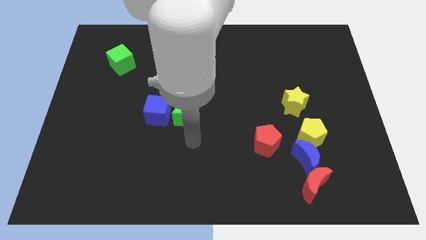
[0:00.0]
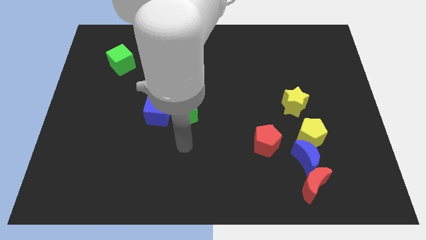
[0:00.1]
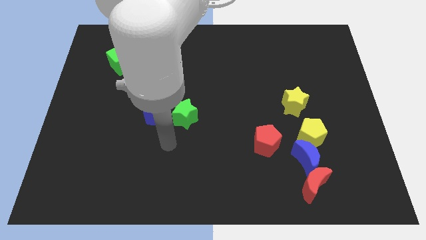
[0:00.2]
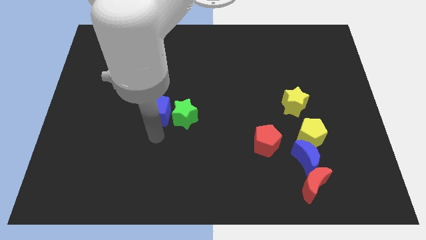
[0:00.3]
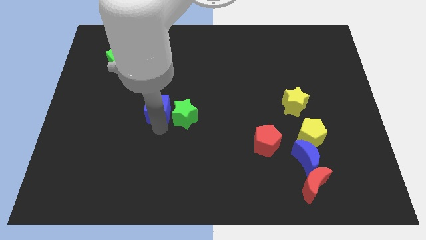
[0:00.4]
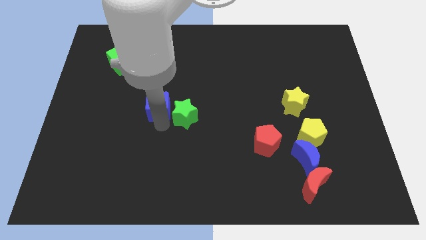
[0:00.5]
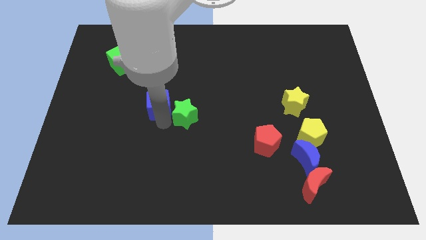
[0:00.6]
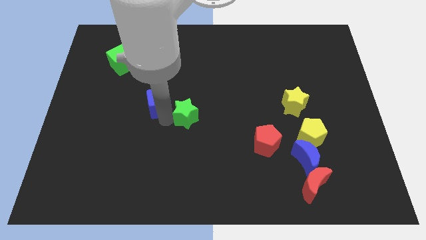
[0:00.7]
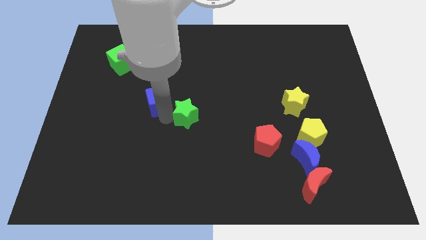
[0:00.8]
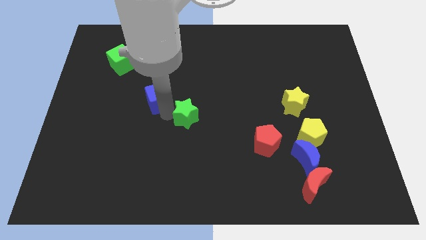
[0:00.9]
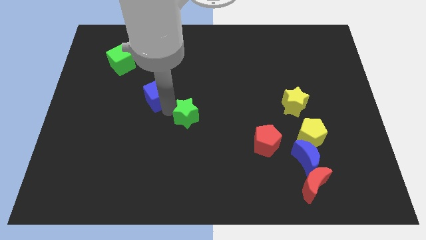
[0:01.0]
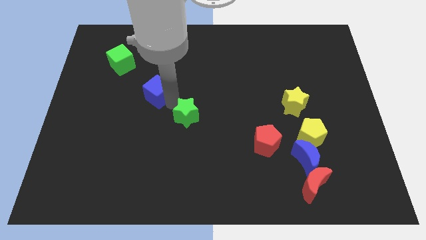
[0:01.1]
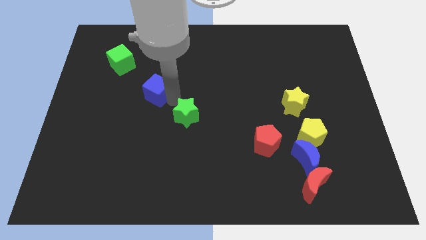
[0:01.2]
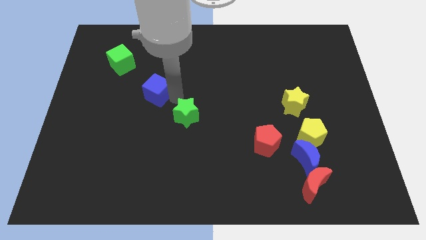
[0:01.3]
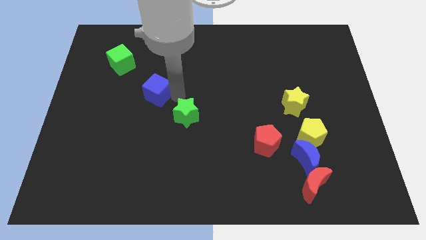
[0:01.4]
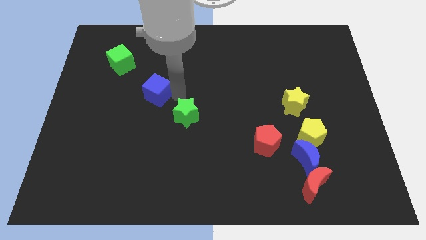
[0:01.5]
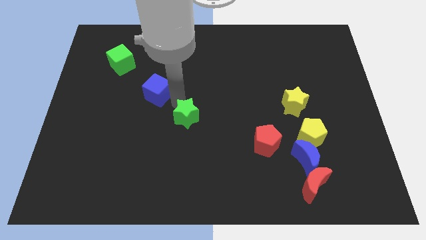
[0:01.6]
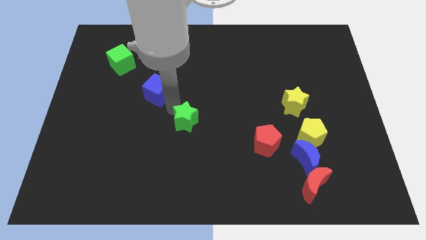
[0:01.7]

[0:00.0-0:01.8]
separate the blue cube and the green star

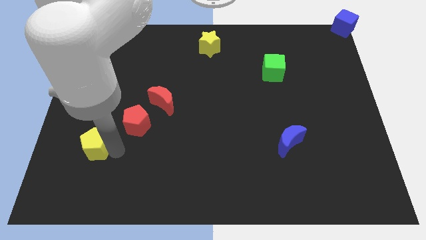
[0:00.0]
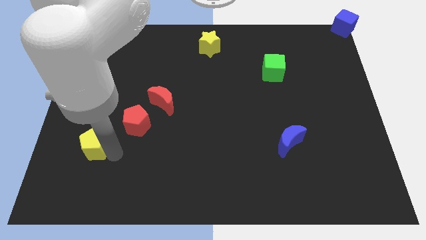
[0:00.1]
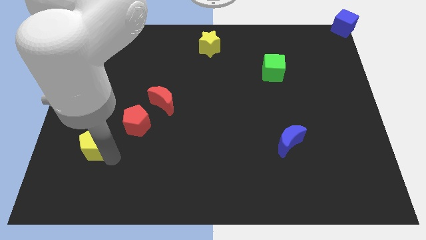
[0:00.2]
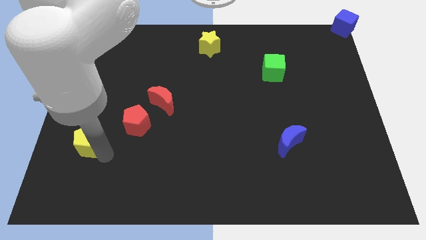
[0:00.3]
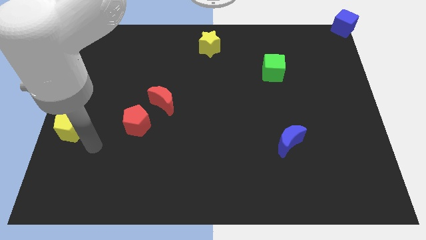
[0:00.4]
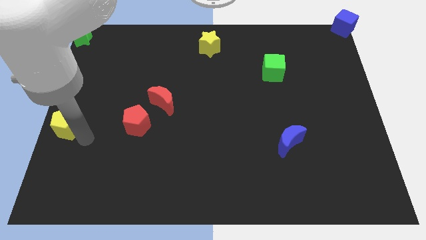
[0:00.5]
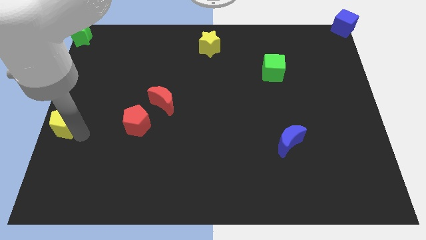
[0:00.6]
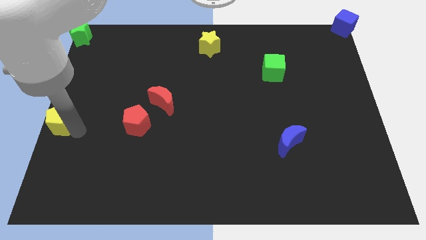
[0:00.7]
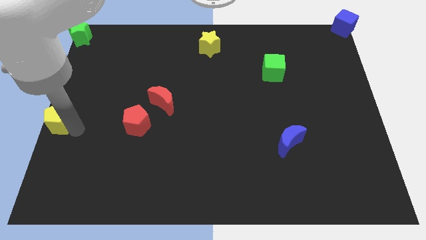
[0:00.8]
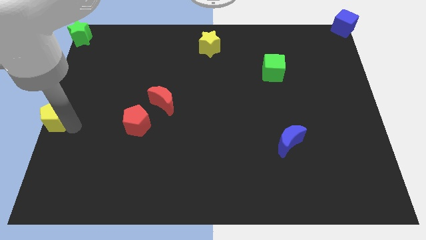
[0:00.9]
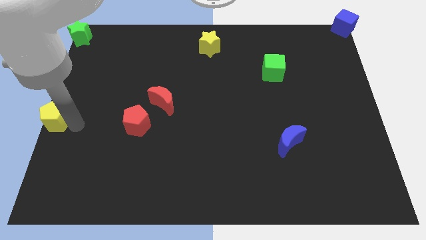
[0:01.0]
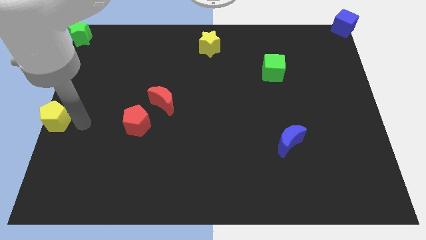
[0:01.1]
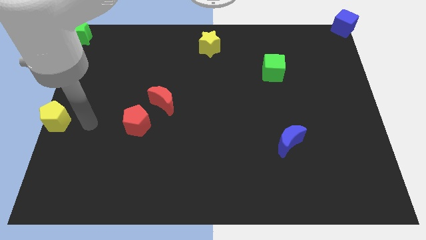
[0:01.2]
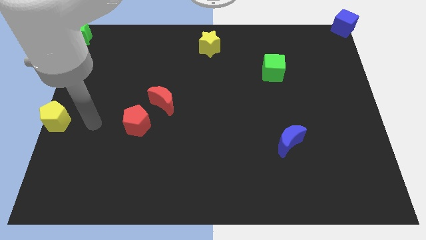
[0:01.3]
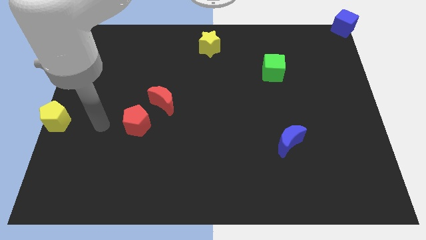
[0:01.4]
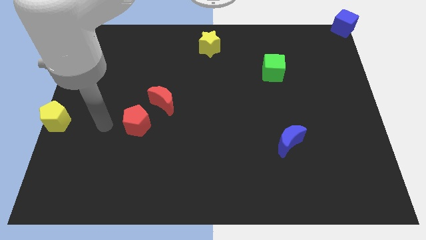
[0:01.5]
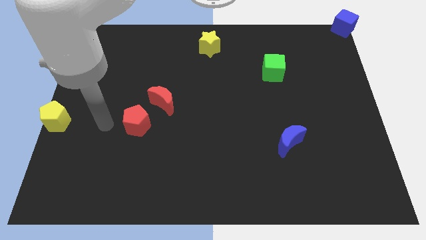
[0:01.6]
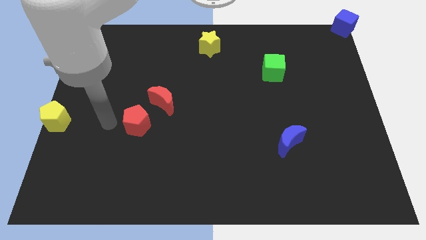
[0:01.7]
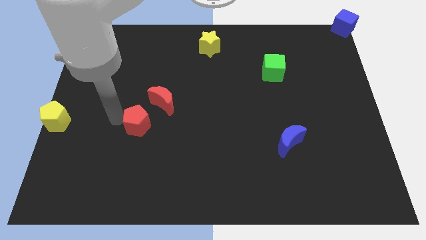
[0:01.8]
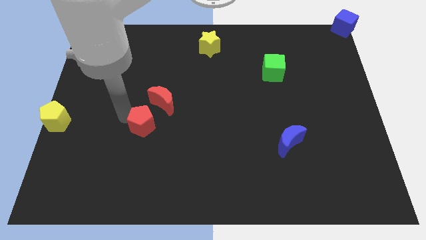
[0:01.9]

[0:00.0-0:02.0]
push the yellow pentagon towards the left center of the board

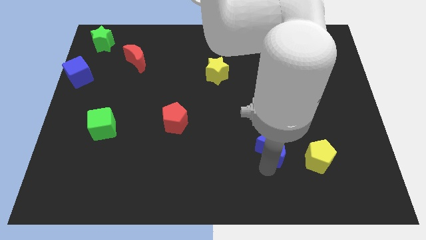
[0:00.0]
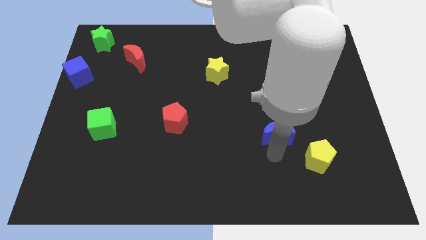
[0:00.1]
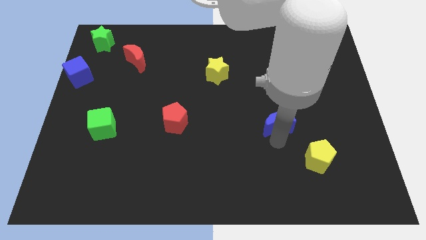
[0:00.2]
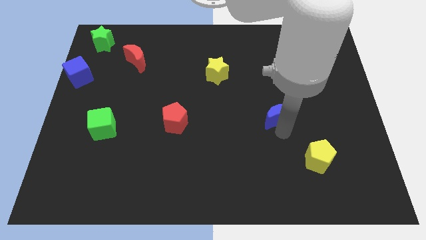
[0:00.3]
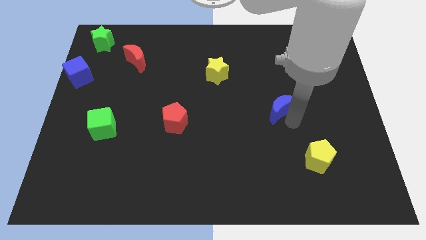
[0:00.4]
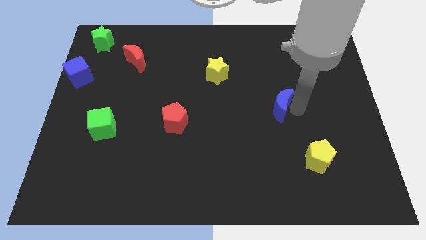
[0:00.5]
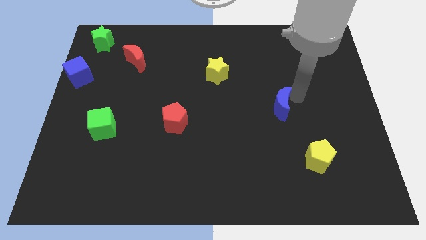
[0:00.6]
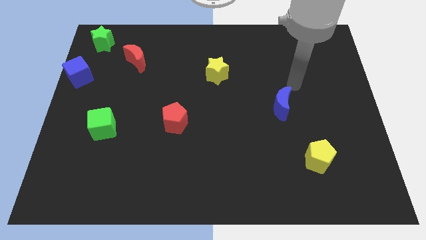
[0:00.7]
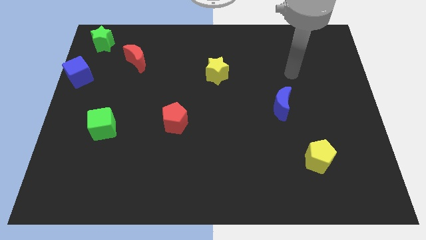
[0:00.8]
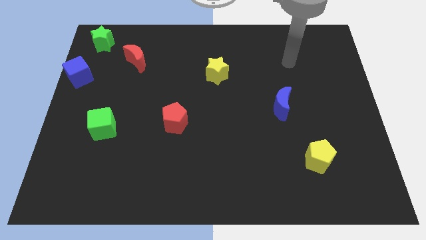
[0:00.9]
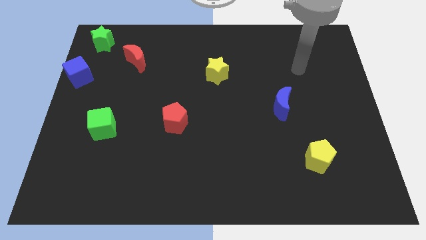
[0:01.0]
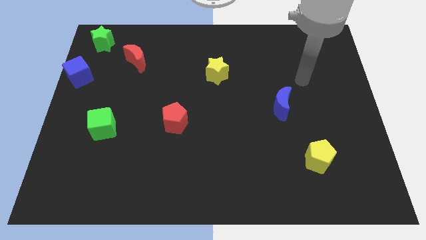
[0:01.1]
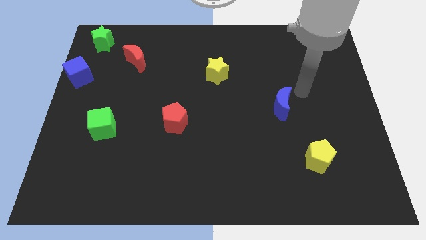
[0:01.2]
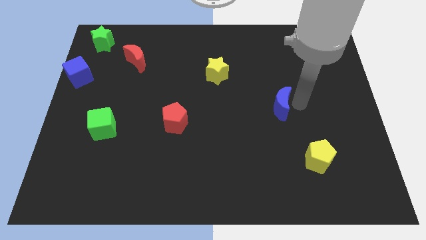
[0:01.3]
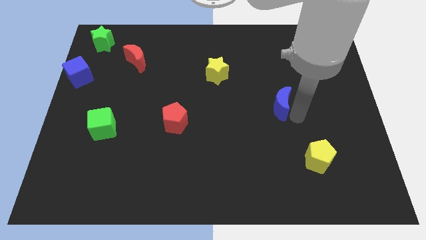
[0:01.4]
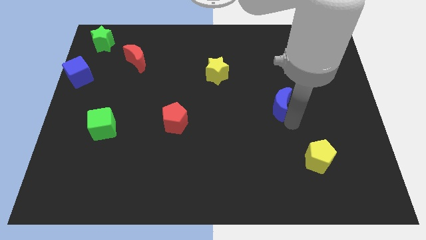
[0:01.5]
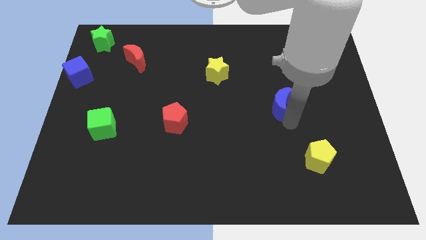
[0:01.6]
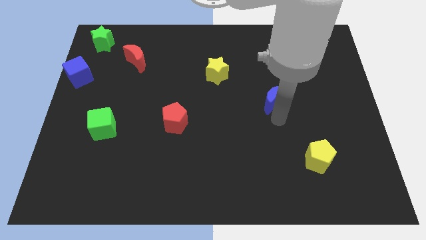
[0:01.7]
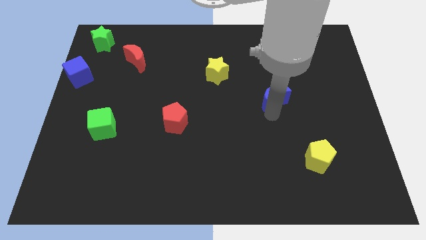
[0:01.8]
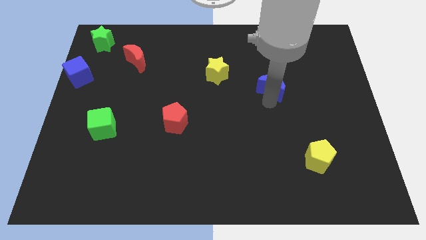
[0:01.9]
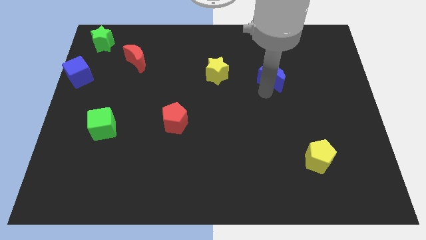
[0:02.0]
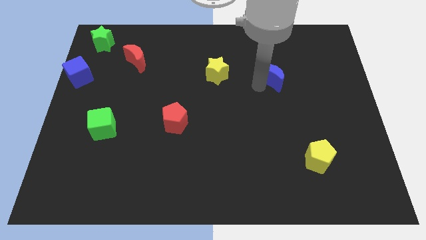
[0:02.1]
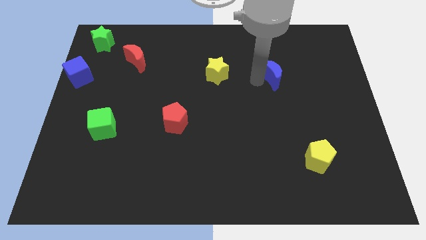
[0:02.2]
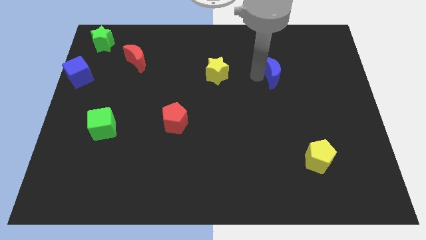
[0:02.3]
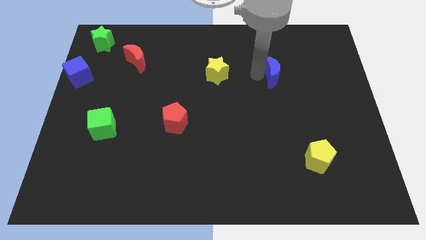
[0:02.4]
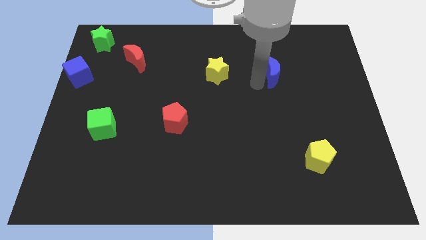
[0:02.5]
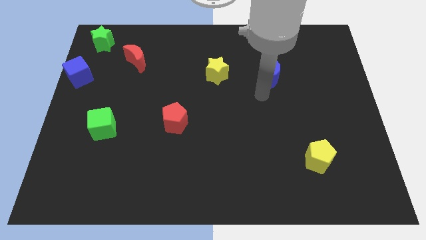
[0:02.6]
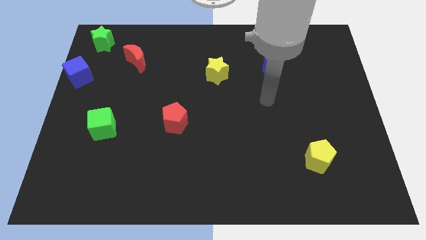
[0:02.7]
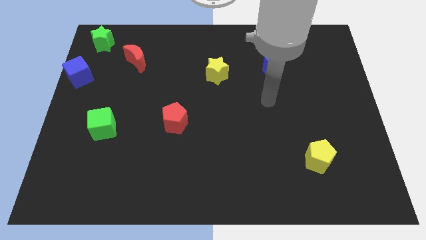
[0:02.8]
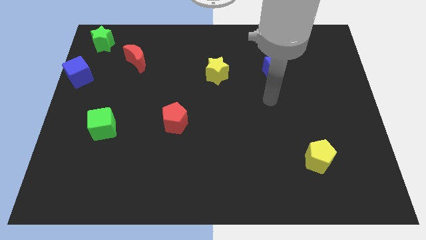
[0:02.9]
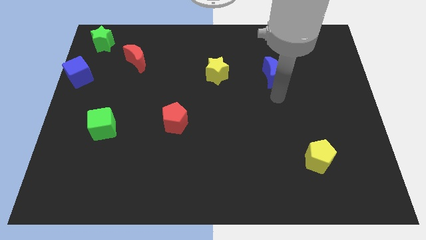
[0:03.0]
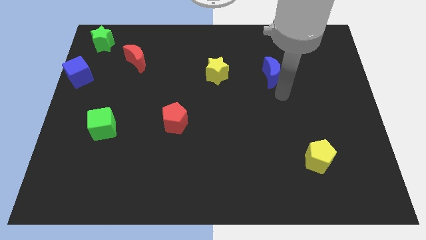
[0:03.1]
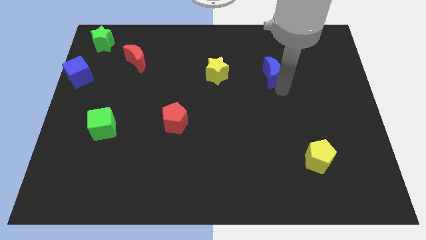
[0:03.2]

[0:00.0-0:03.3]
place blue moon to the right of yellow star

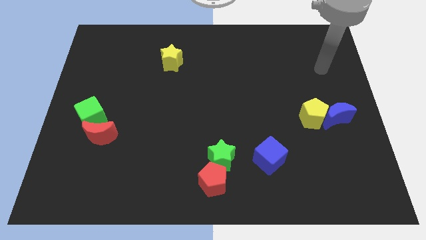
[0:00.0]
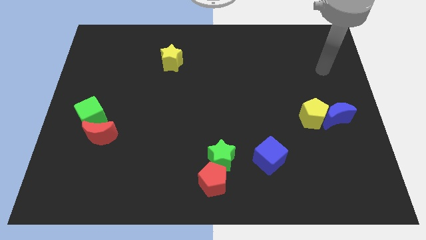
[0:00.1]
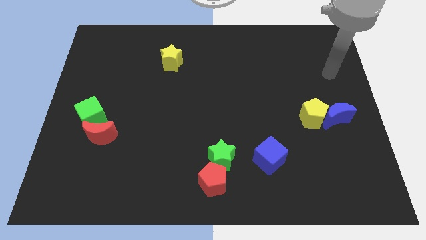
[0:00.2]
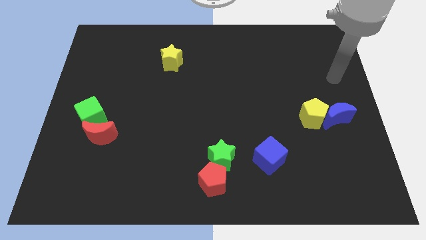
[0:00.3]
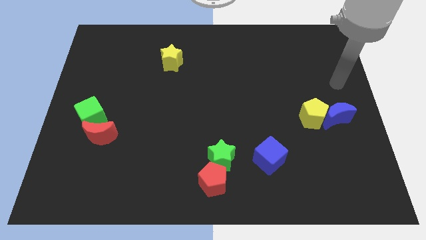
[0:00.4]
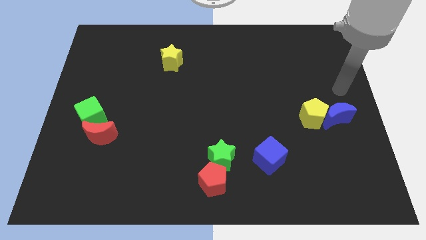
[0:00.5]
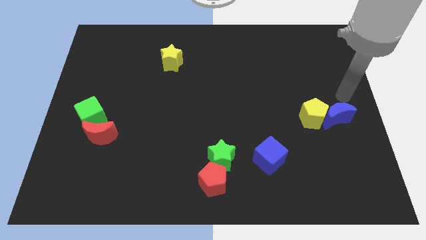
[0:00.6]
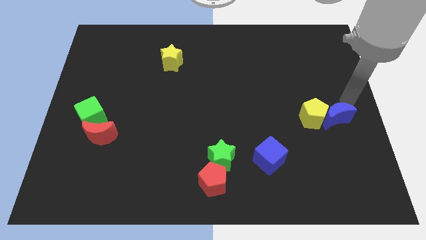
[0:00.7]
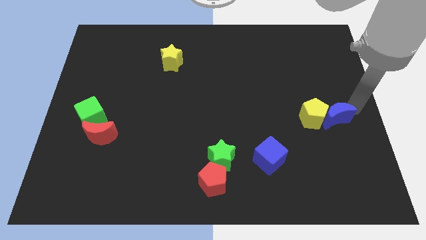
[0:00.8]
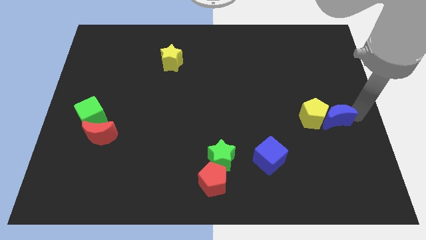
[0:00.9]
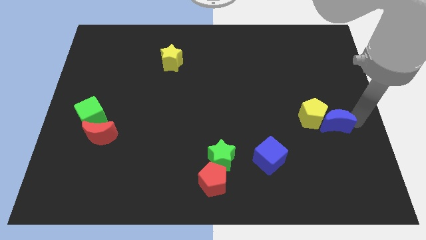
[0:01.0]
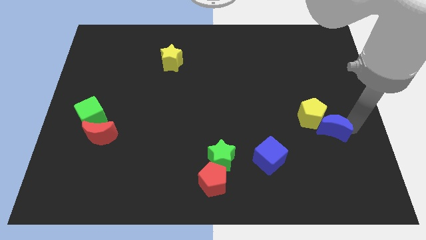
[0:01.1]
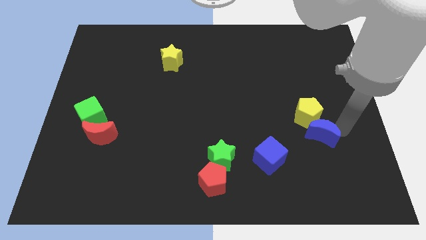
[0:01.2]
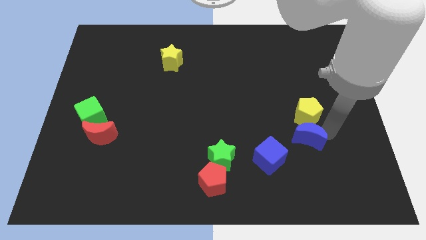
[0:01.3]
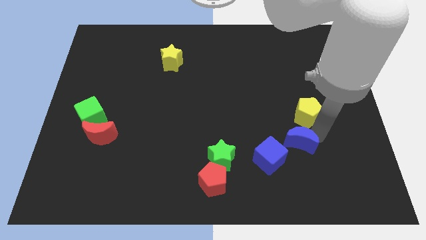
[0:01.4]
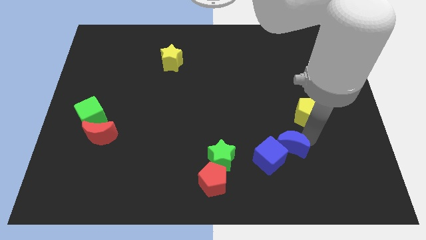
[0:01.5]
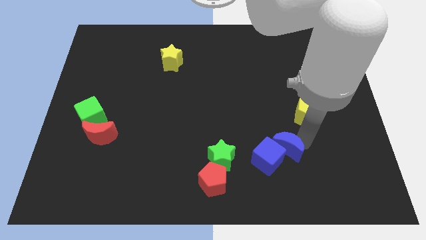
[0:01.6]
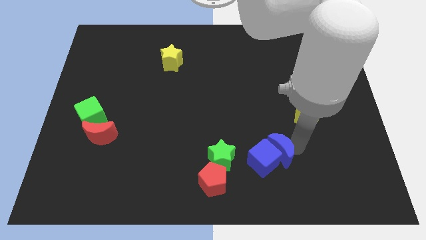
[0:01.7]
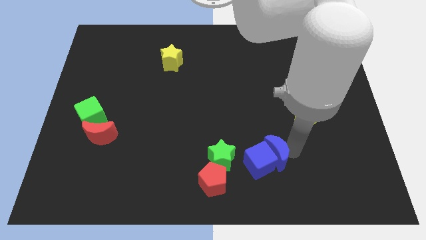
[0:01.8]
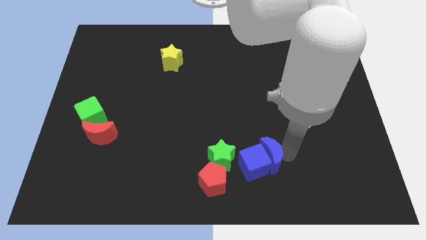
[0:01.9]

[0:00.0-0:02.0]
push the blue crescent into the blue cube
